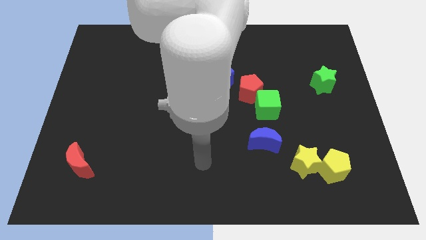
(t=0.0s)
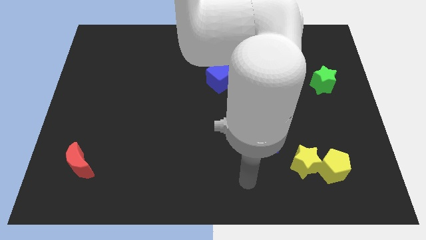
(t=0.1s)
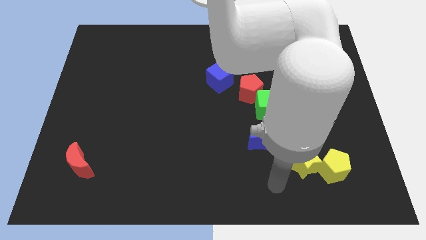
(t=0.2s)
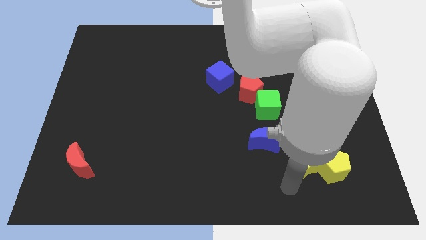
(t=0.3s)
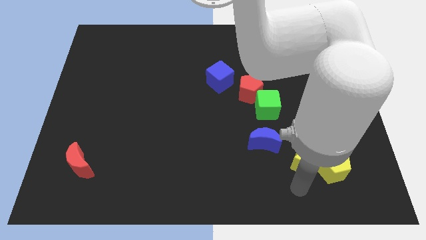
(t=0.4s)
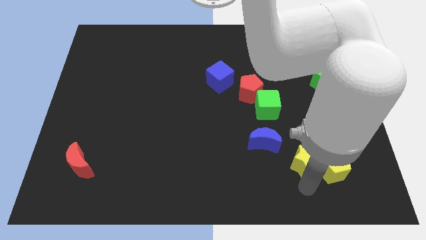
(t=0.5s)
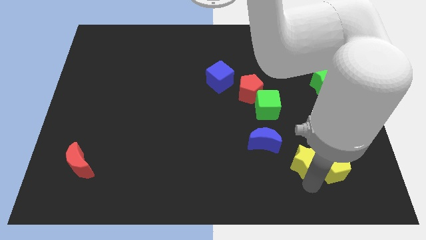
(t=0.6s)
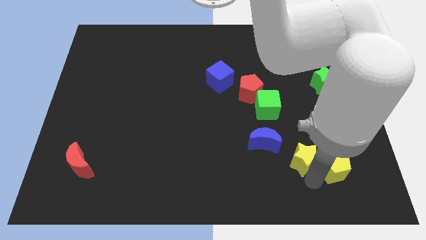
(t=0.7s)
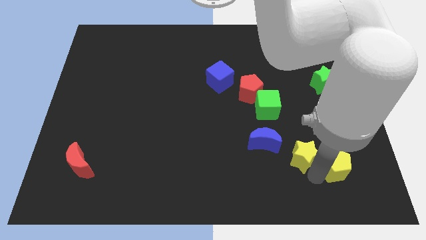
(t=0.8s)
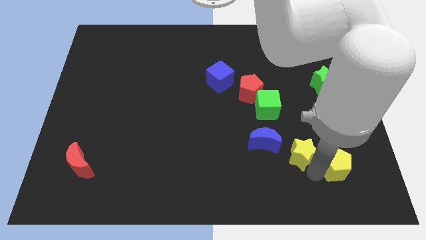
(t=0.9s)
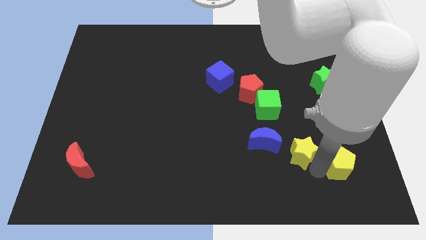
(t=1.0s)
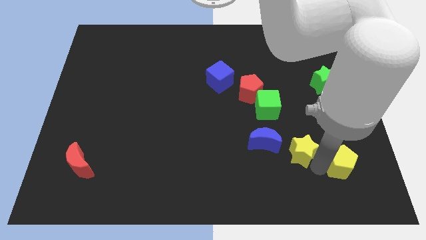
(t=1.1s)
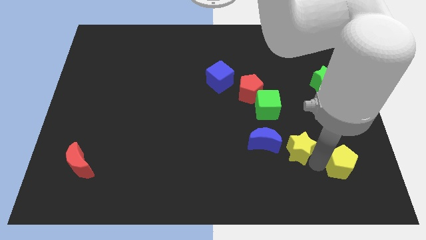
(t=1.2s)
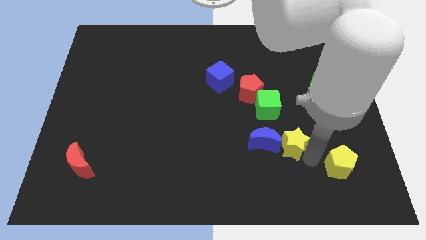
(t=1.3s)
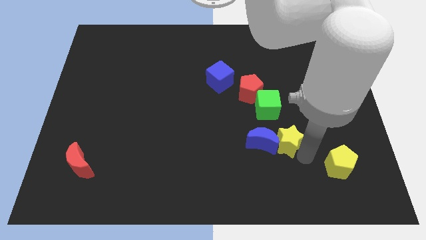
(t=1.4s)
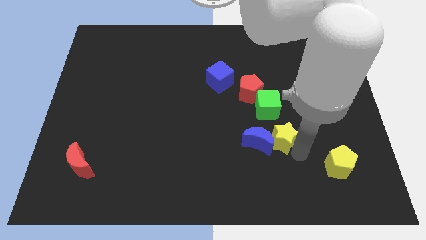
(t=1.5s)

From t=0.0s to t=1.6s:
put the yellow star close to the blue moon

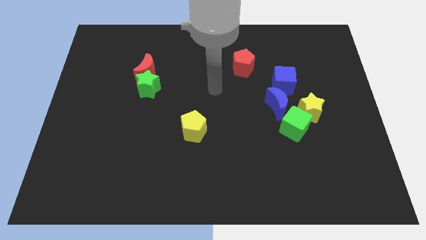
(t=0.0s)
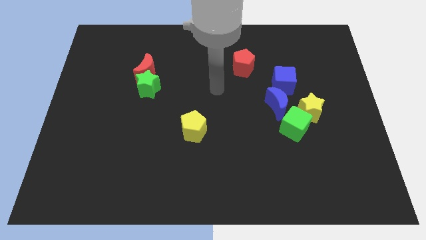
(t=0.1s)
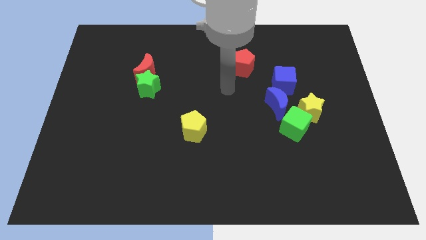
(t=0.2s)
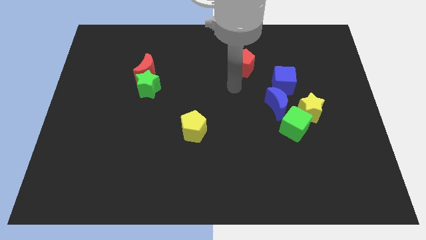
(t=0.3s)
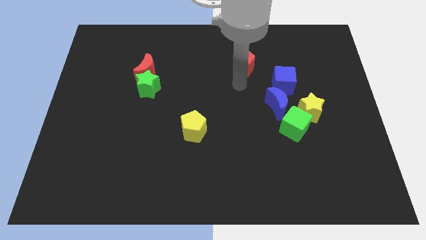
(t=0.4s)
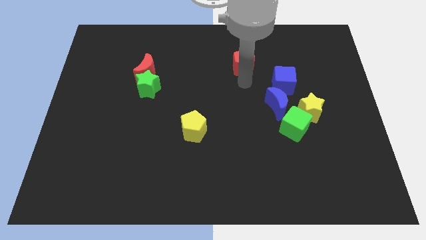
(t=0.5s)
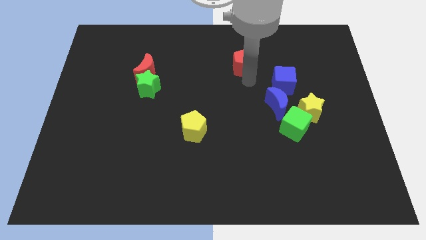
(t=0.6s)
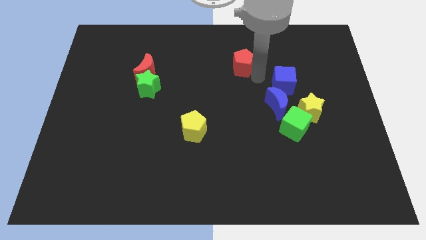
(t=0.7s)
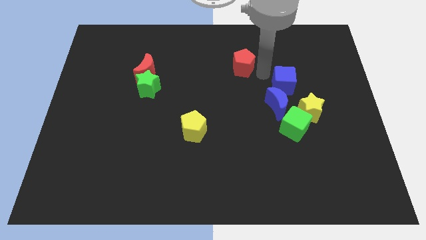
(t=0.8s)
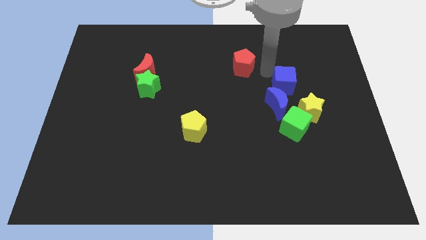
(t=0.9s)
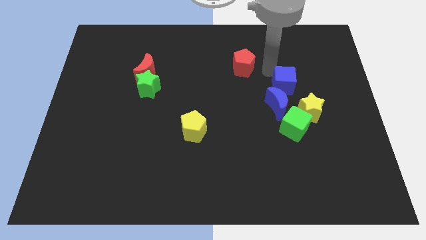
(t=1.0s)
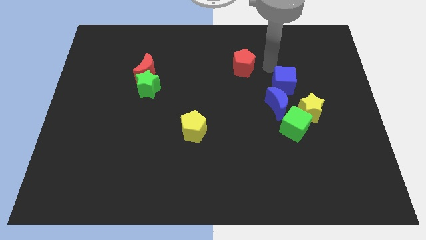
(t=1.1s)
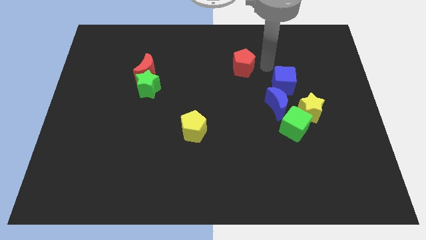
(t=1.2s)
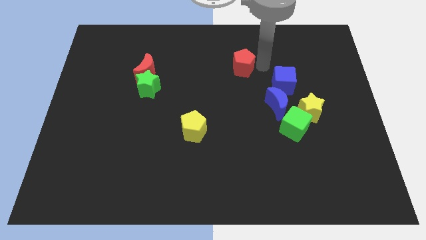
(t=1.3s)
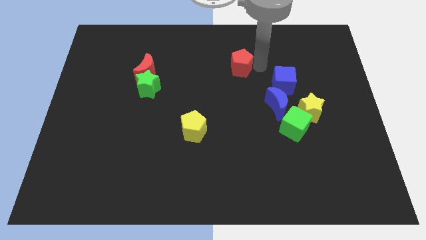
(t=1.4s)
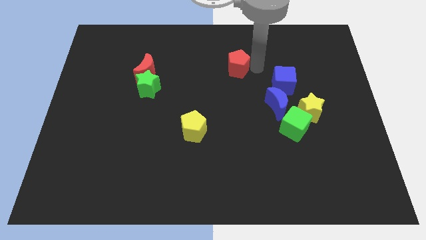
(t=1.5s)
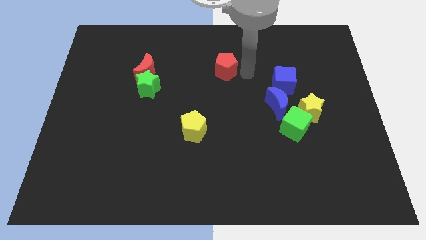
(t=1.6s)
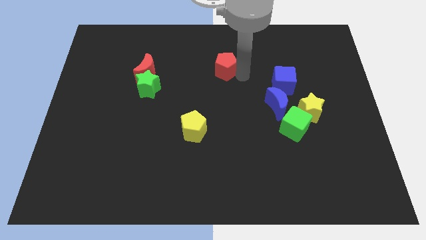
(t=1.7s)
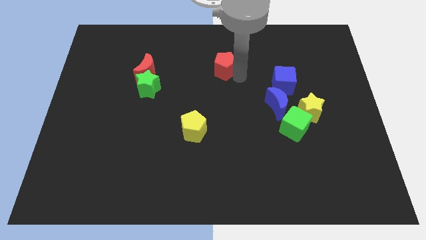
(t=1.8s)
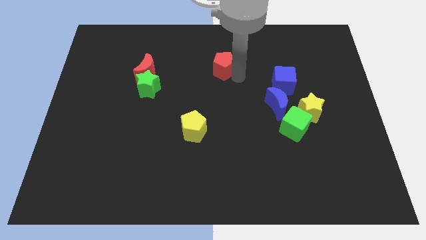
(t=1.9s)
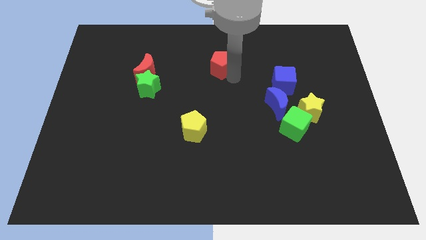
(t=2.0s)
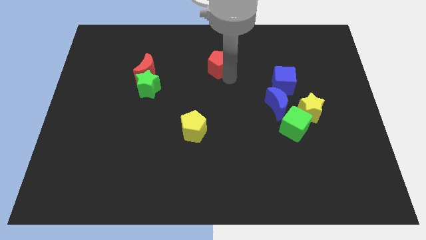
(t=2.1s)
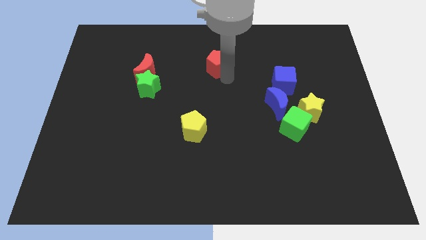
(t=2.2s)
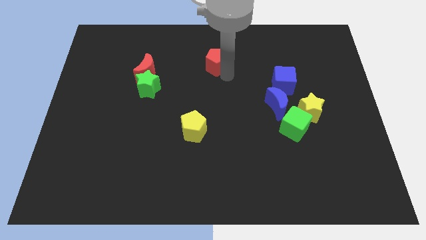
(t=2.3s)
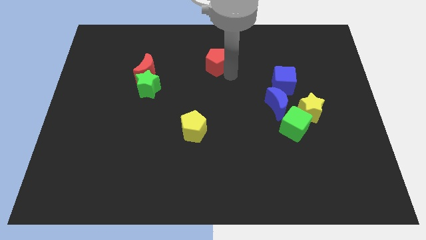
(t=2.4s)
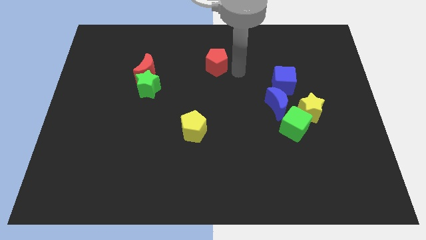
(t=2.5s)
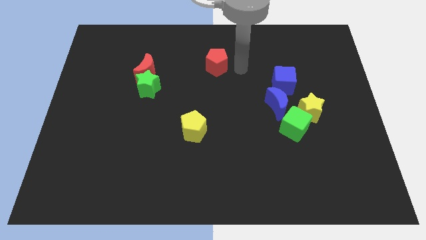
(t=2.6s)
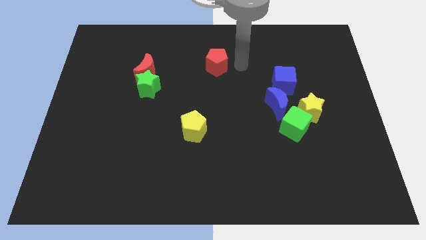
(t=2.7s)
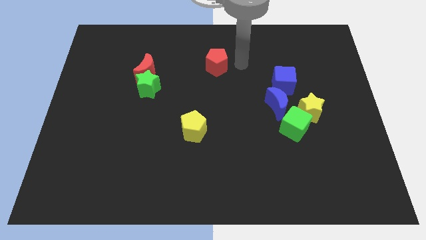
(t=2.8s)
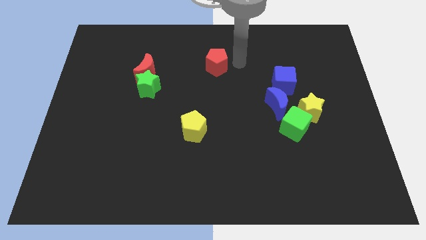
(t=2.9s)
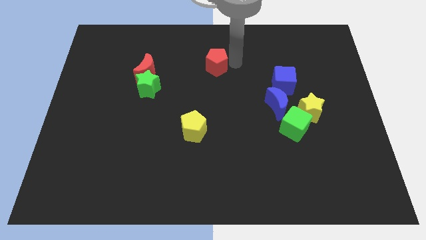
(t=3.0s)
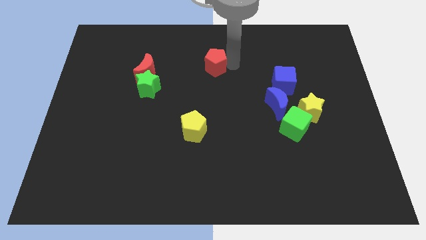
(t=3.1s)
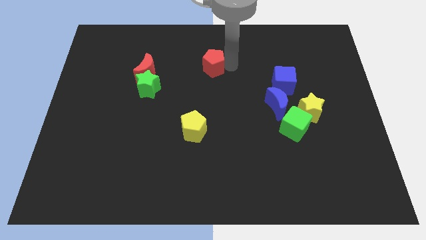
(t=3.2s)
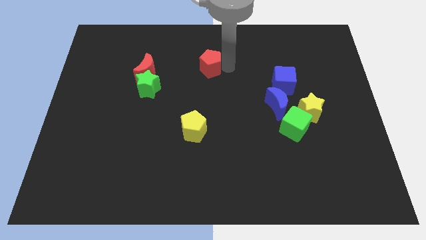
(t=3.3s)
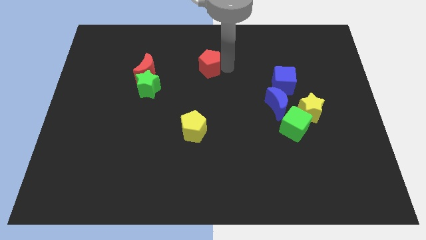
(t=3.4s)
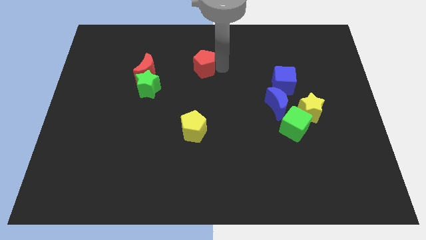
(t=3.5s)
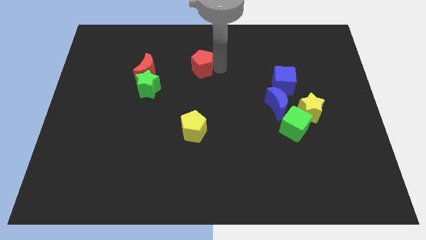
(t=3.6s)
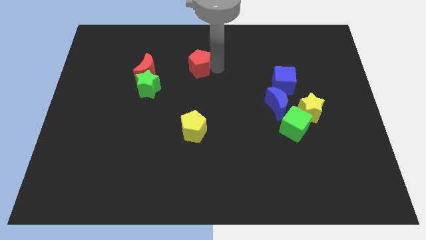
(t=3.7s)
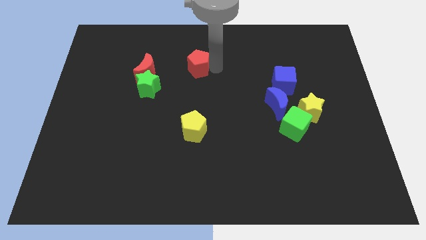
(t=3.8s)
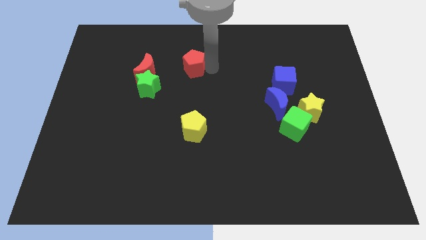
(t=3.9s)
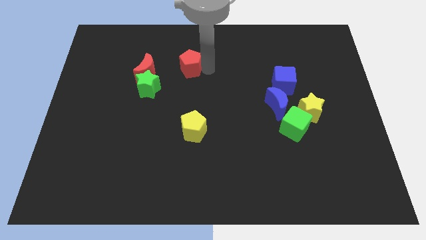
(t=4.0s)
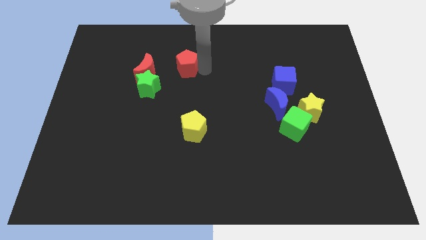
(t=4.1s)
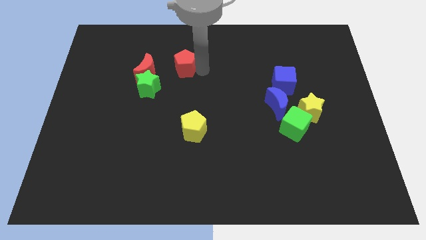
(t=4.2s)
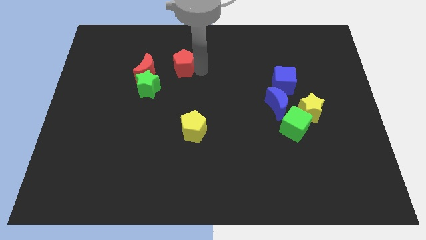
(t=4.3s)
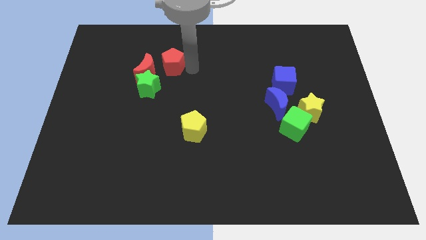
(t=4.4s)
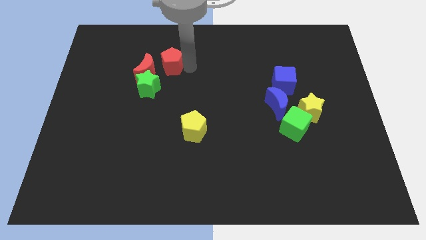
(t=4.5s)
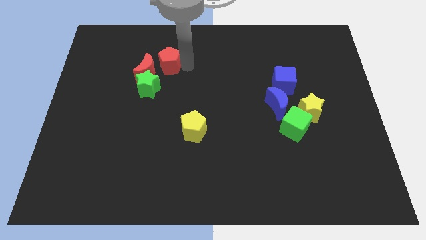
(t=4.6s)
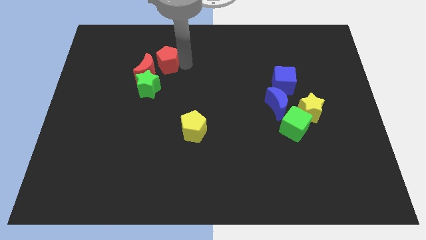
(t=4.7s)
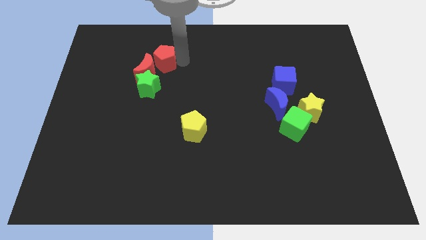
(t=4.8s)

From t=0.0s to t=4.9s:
push the red pentagon next to the red moon

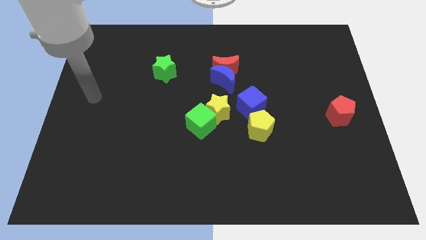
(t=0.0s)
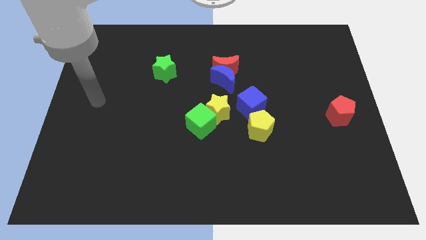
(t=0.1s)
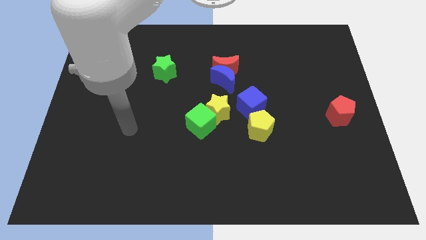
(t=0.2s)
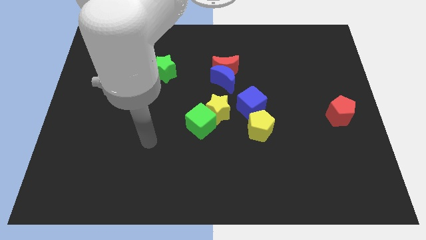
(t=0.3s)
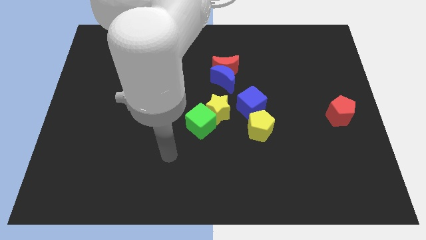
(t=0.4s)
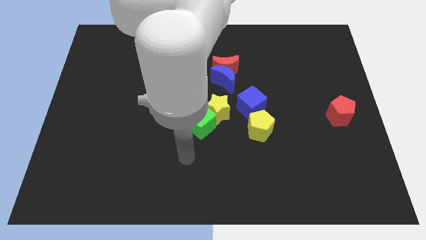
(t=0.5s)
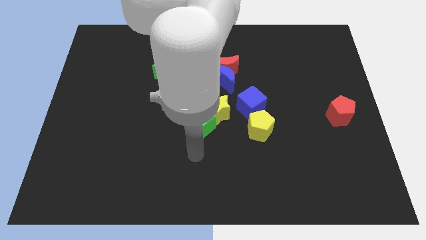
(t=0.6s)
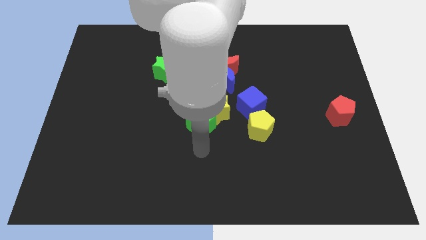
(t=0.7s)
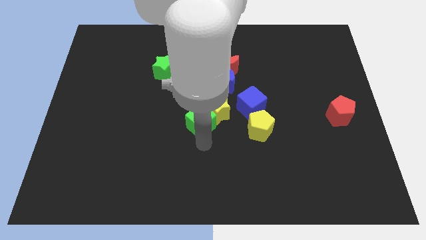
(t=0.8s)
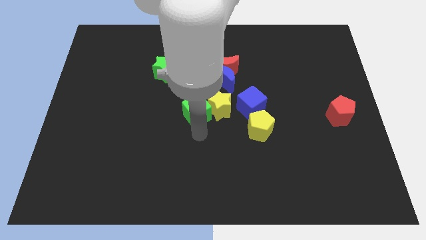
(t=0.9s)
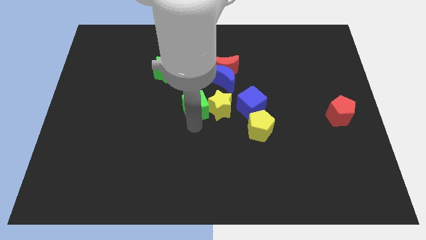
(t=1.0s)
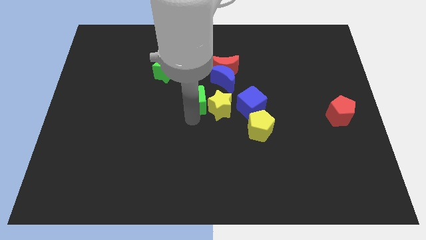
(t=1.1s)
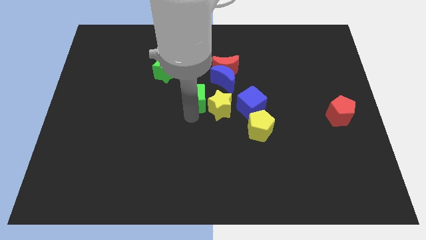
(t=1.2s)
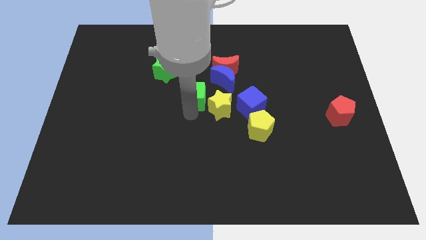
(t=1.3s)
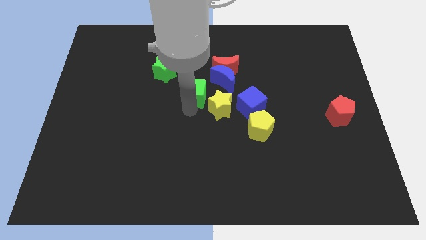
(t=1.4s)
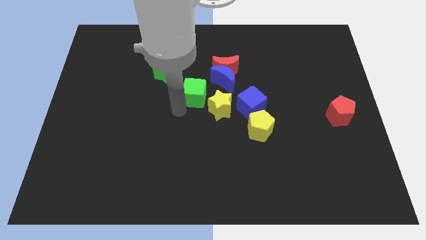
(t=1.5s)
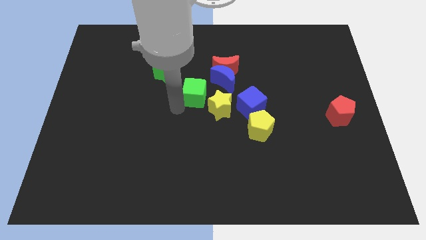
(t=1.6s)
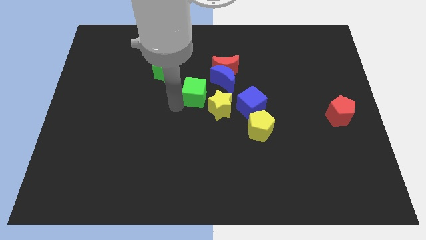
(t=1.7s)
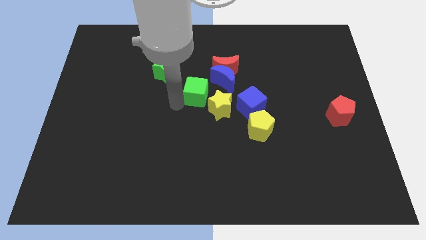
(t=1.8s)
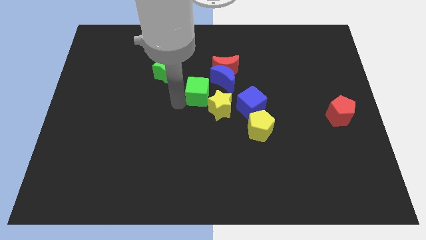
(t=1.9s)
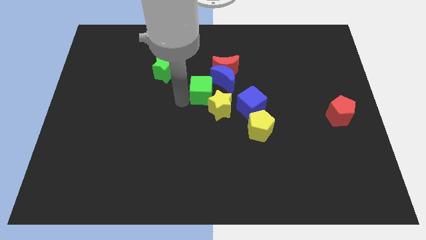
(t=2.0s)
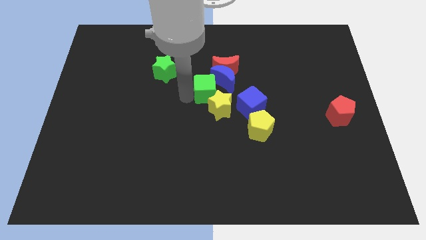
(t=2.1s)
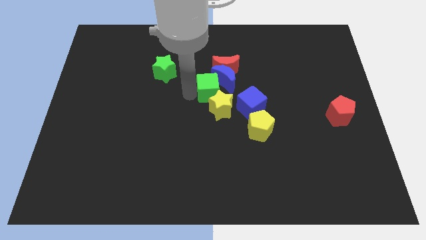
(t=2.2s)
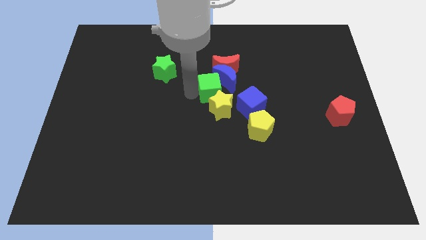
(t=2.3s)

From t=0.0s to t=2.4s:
move the green cube close to the blue moon
